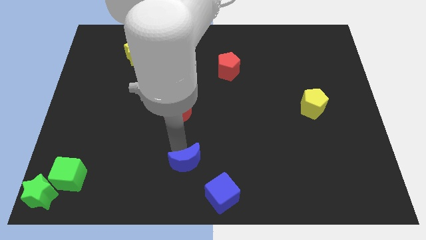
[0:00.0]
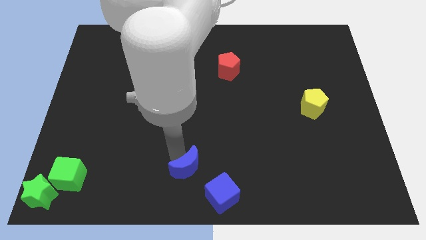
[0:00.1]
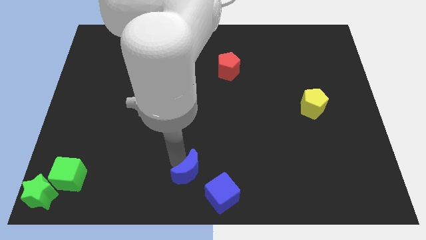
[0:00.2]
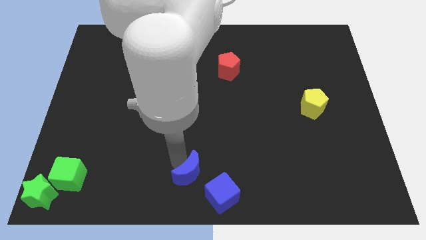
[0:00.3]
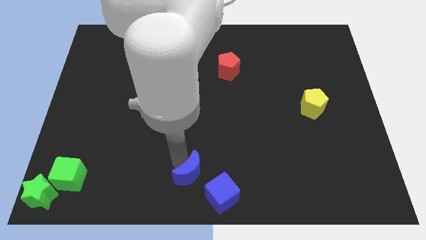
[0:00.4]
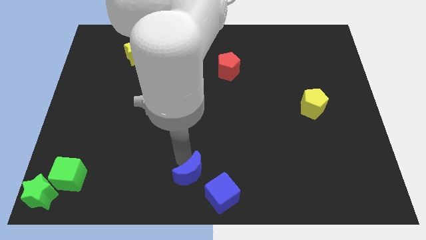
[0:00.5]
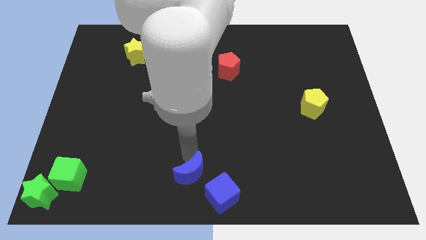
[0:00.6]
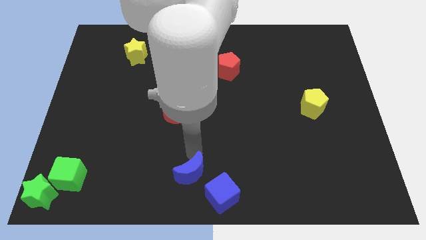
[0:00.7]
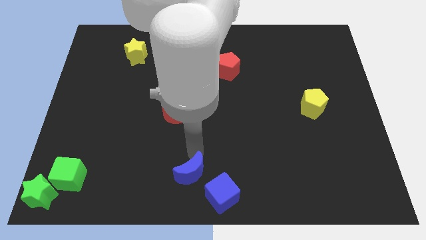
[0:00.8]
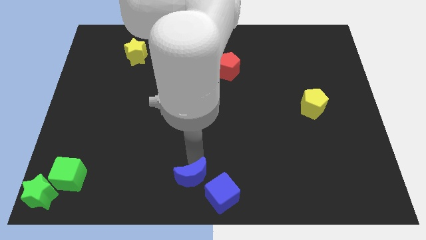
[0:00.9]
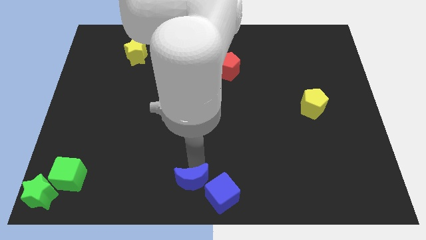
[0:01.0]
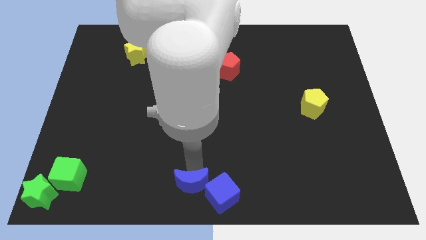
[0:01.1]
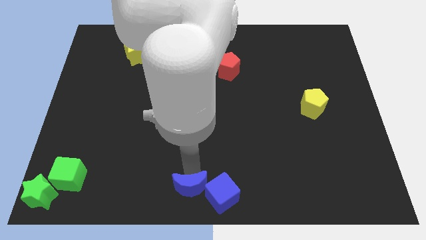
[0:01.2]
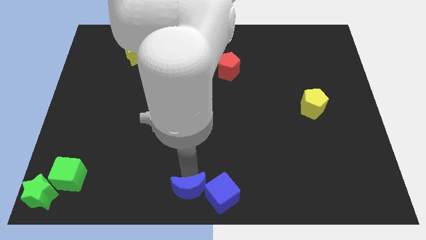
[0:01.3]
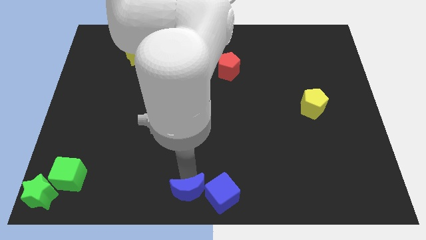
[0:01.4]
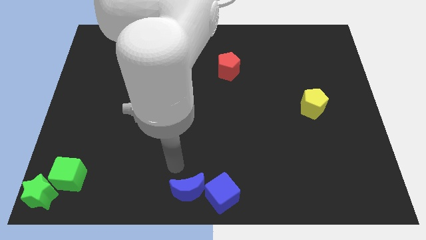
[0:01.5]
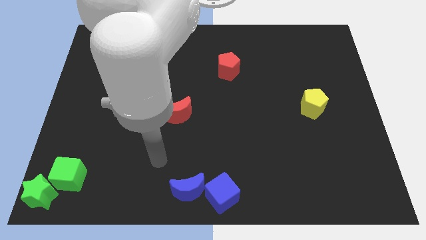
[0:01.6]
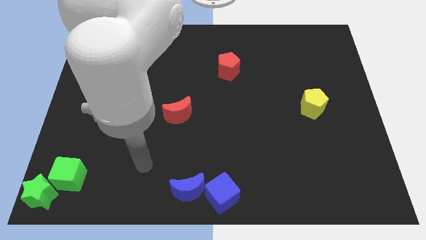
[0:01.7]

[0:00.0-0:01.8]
push the blue crescent close to the blue cube

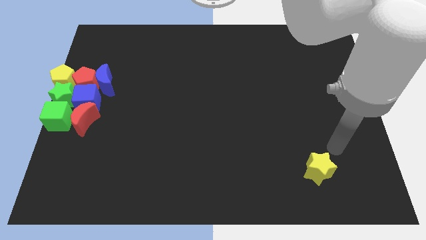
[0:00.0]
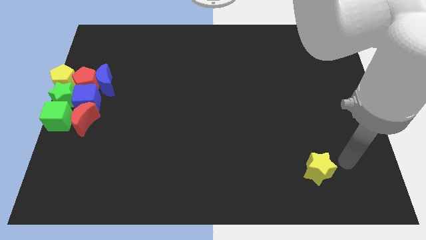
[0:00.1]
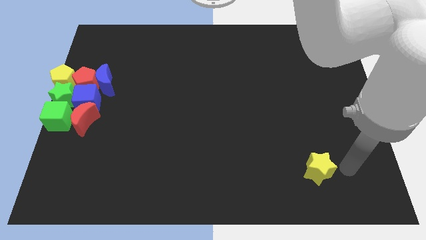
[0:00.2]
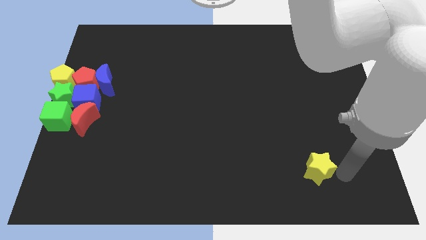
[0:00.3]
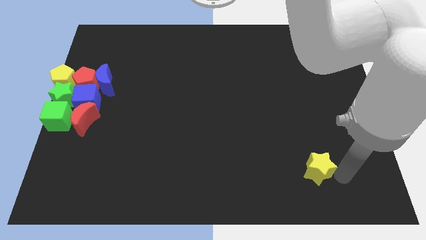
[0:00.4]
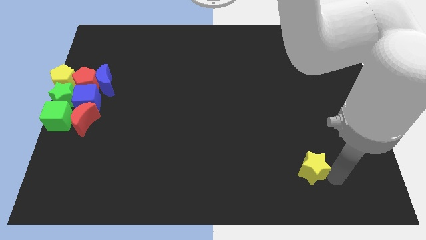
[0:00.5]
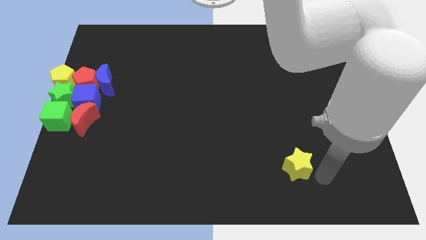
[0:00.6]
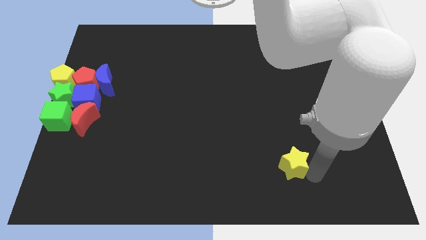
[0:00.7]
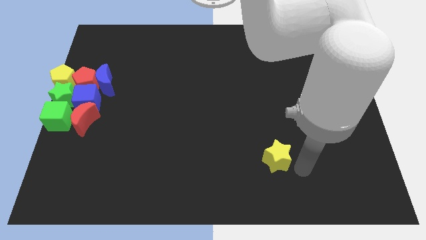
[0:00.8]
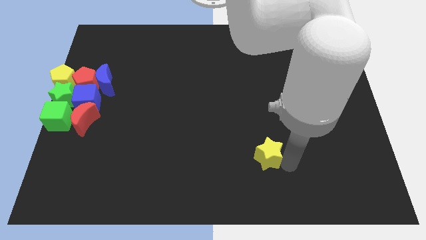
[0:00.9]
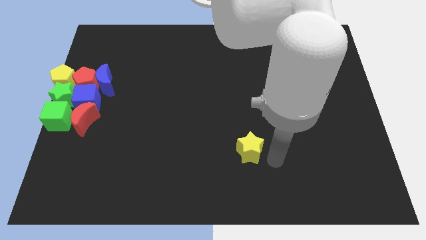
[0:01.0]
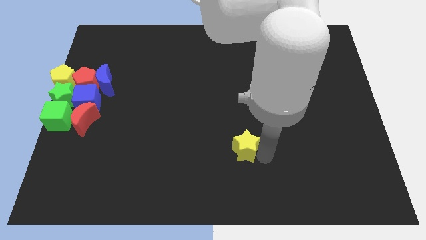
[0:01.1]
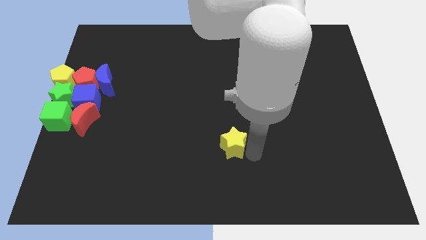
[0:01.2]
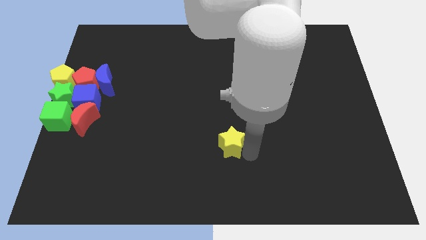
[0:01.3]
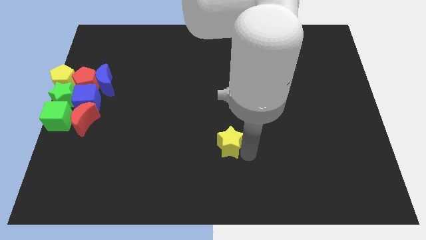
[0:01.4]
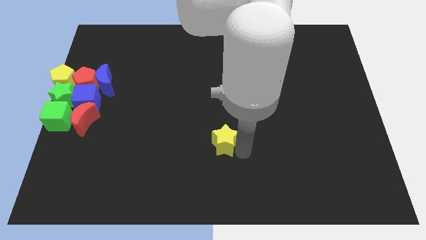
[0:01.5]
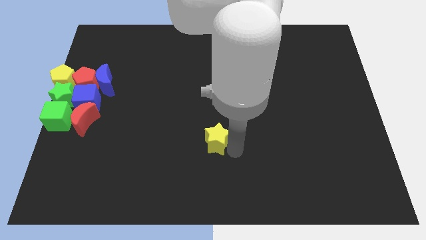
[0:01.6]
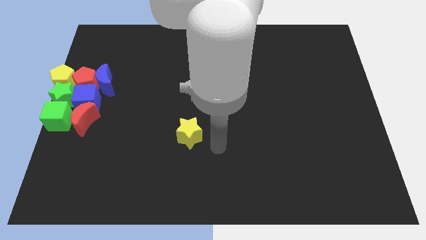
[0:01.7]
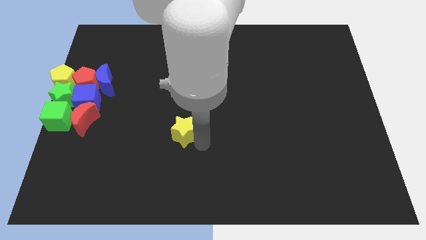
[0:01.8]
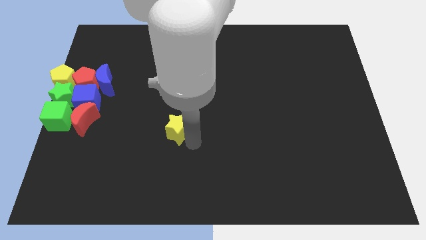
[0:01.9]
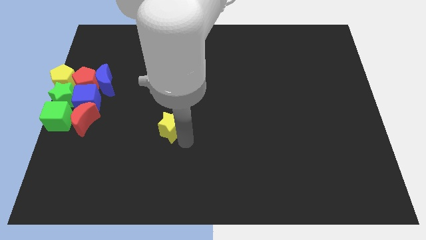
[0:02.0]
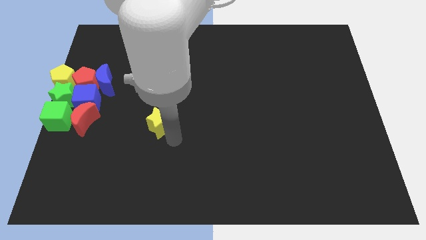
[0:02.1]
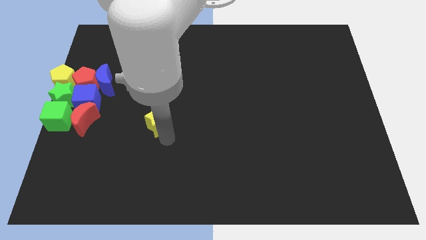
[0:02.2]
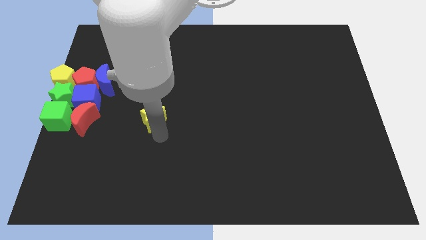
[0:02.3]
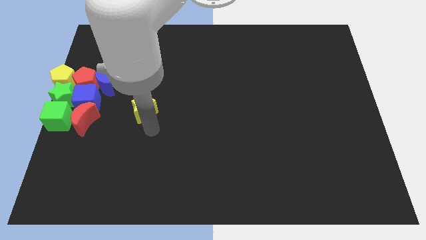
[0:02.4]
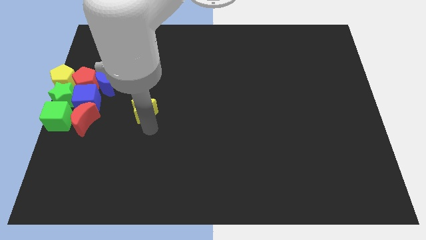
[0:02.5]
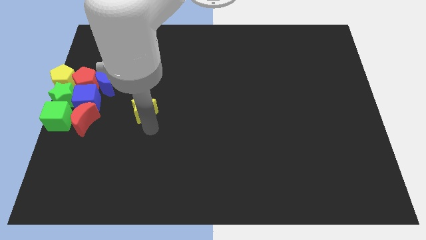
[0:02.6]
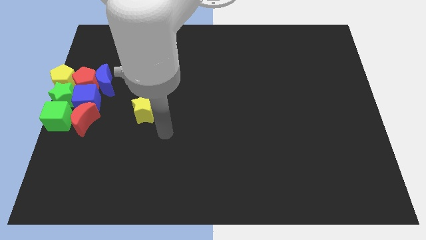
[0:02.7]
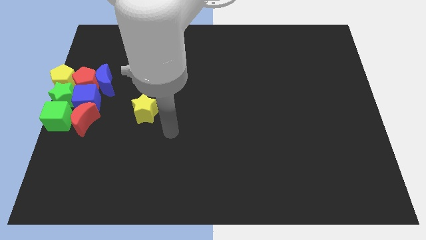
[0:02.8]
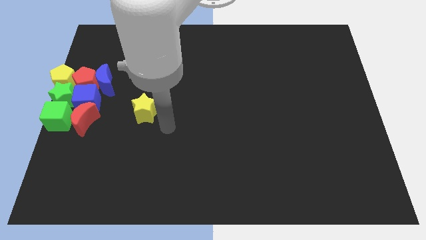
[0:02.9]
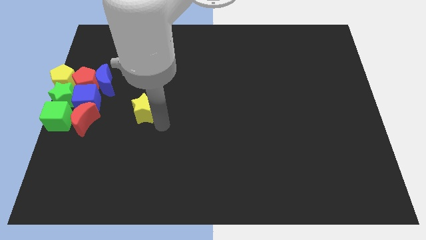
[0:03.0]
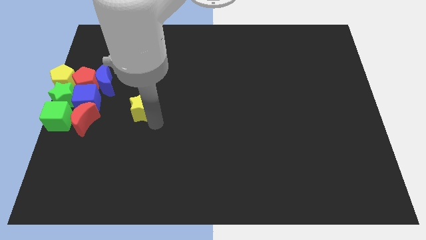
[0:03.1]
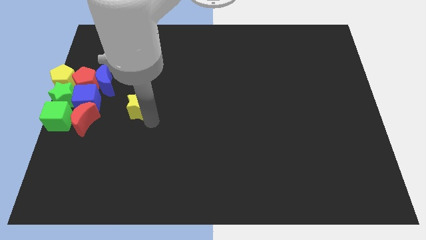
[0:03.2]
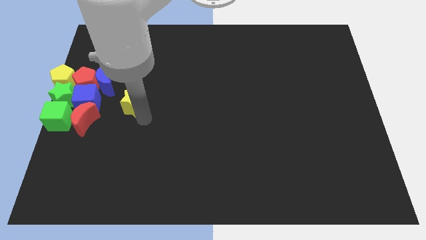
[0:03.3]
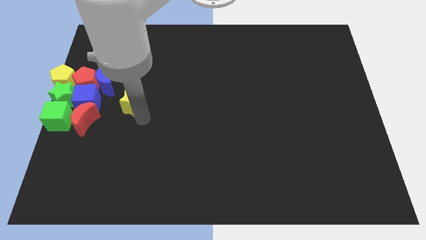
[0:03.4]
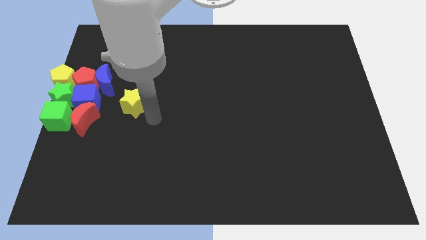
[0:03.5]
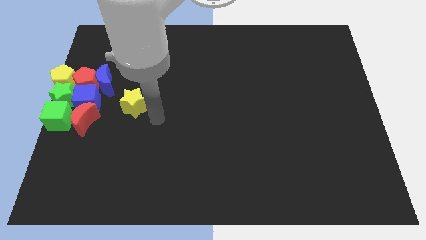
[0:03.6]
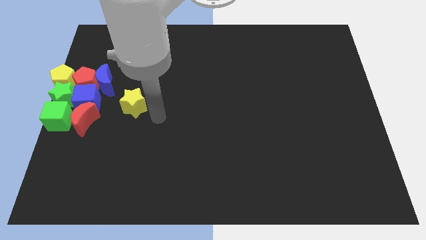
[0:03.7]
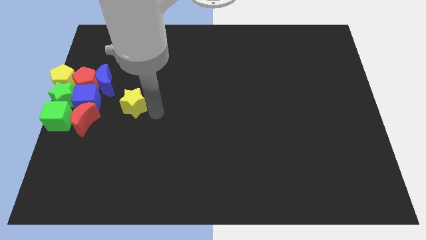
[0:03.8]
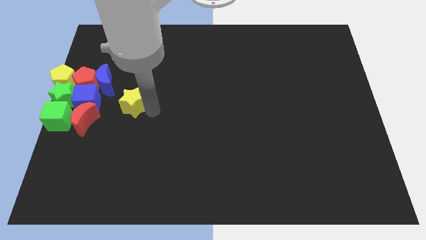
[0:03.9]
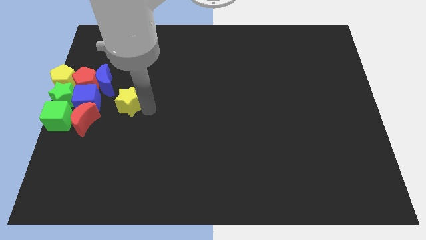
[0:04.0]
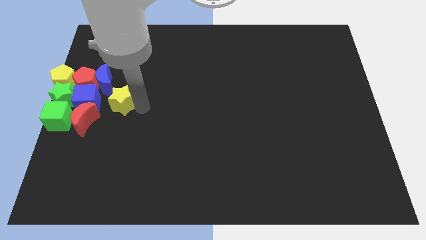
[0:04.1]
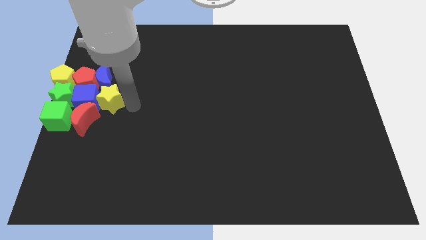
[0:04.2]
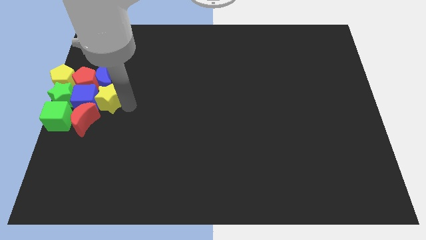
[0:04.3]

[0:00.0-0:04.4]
move the yellow star to the right side of the group of blocks

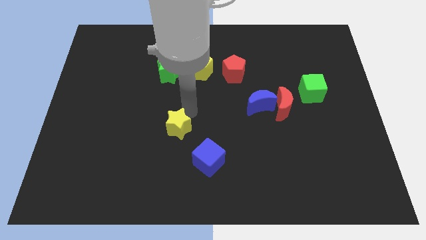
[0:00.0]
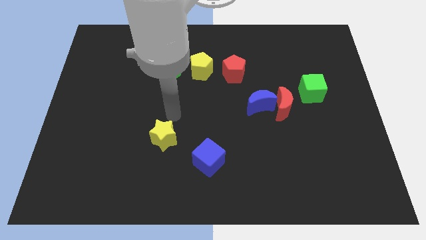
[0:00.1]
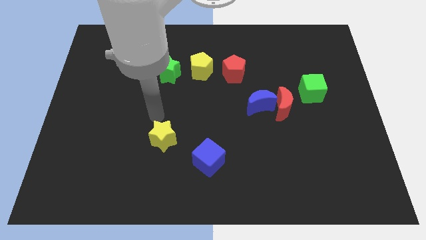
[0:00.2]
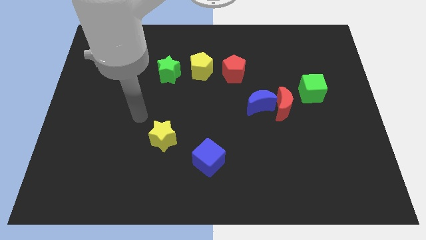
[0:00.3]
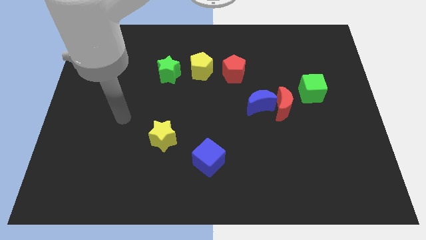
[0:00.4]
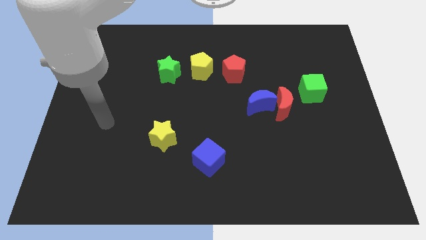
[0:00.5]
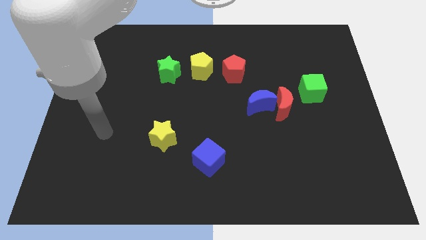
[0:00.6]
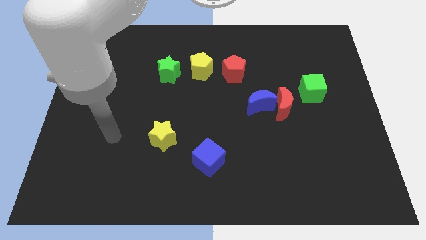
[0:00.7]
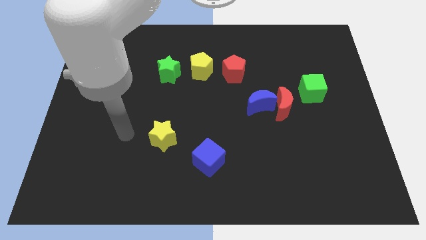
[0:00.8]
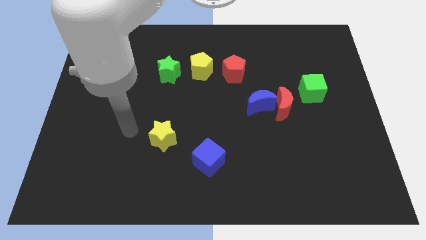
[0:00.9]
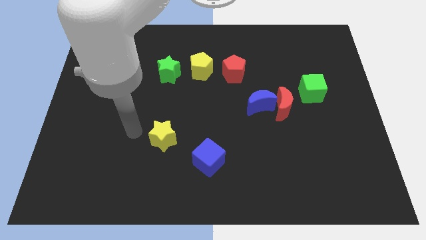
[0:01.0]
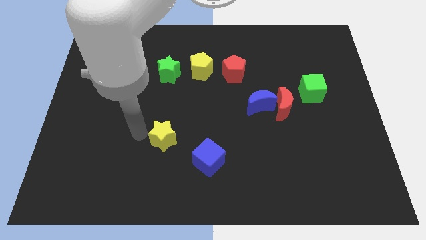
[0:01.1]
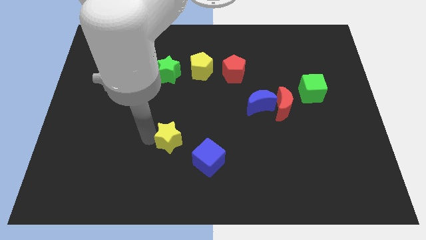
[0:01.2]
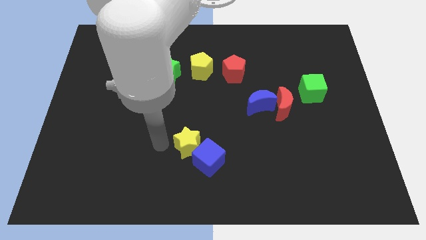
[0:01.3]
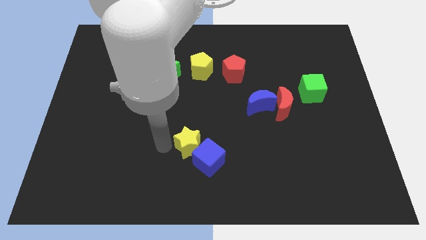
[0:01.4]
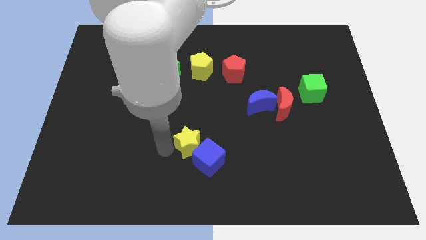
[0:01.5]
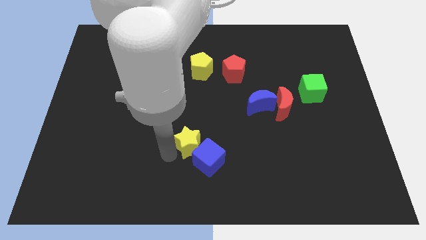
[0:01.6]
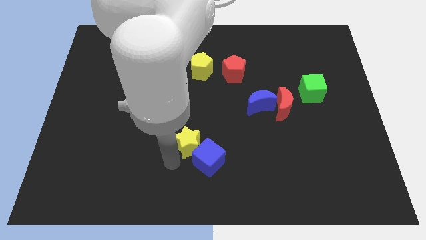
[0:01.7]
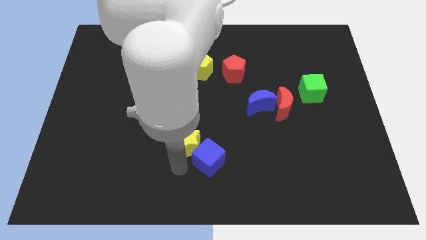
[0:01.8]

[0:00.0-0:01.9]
push the yellow star into the blue cube

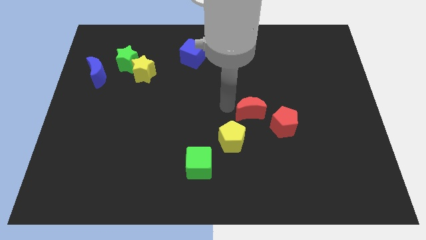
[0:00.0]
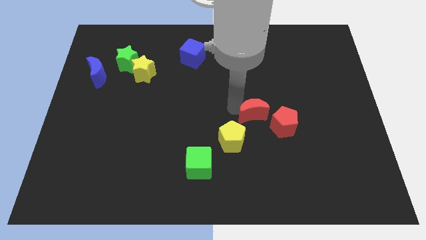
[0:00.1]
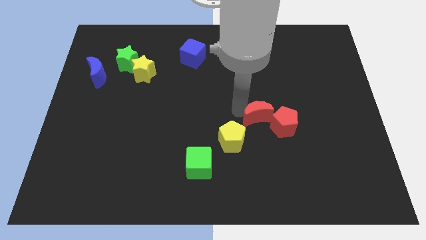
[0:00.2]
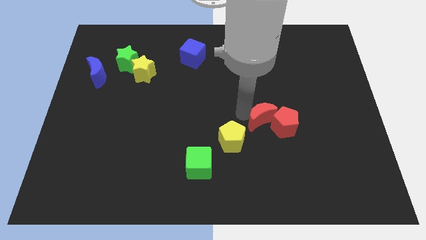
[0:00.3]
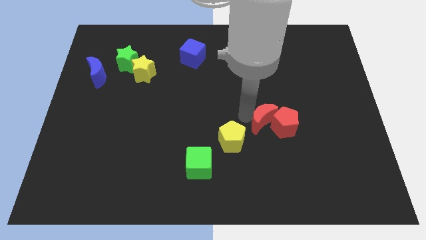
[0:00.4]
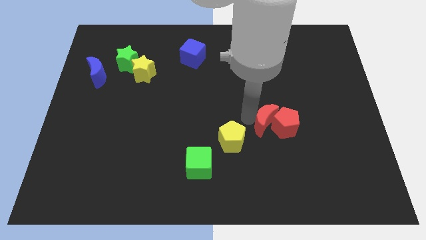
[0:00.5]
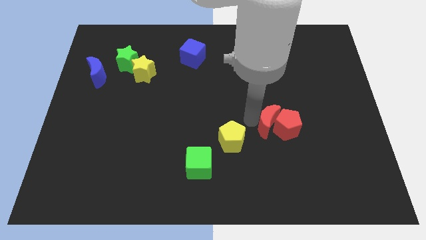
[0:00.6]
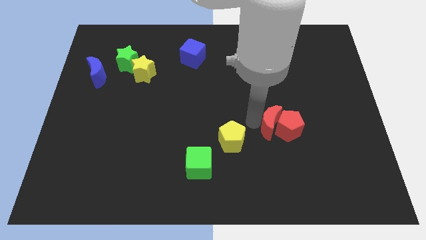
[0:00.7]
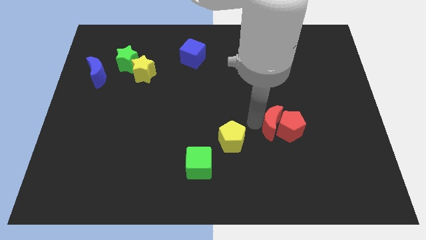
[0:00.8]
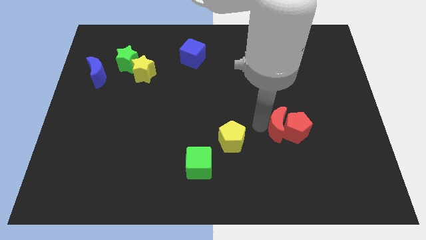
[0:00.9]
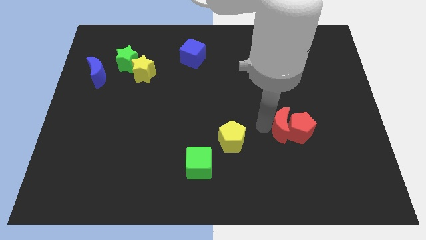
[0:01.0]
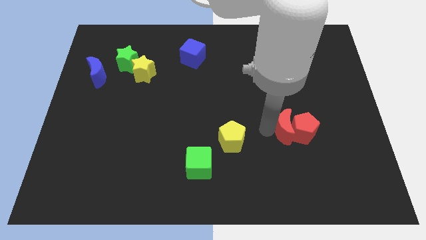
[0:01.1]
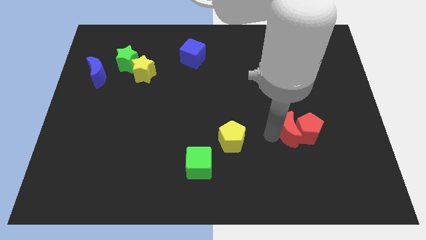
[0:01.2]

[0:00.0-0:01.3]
push the red moon into the red pentagon
